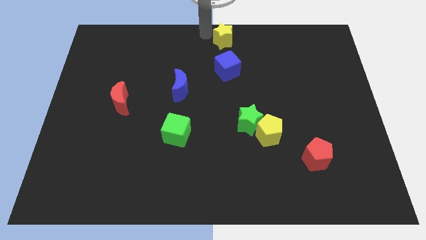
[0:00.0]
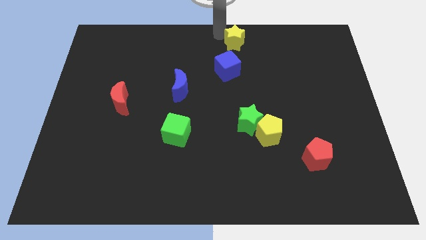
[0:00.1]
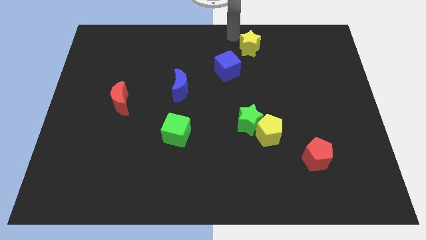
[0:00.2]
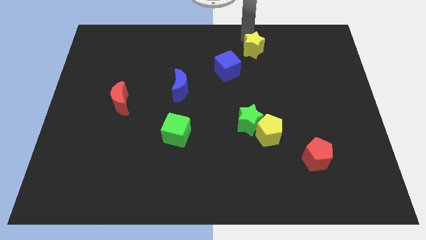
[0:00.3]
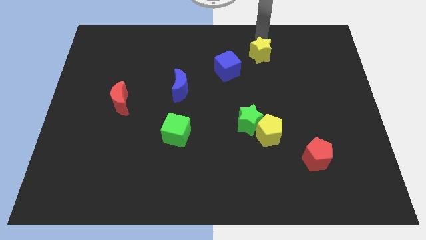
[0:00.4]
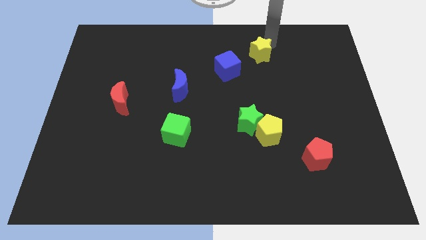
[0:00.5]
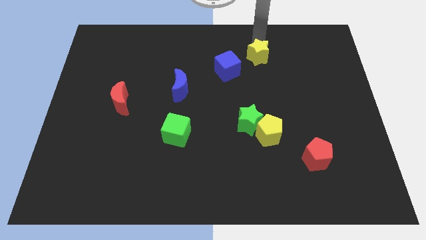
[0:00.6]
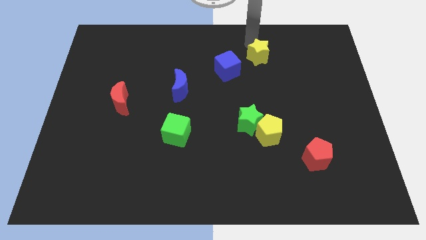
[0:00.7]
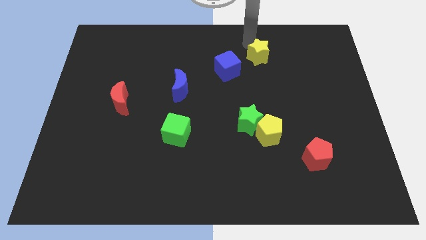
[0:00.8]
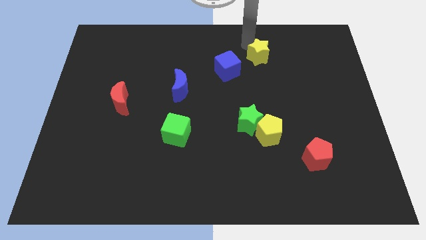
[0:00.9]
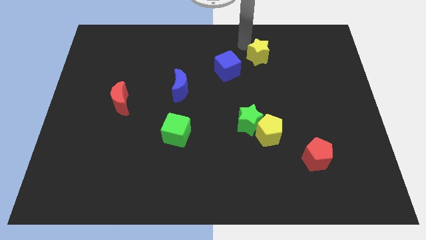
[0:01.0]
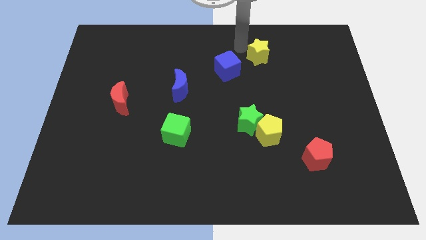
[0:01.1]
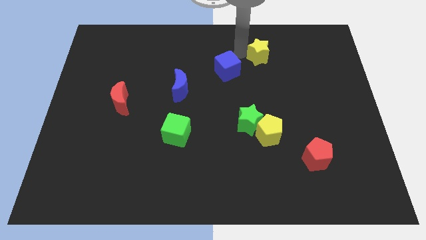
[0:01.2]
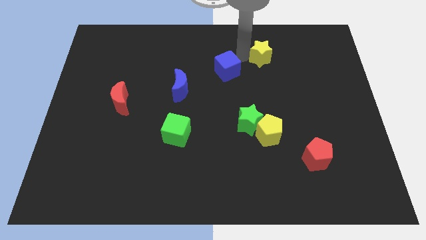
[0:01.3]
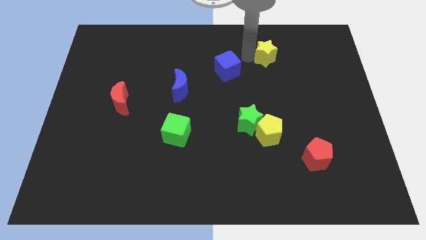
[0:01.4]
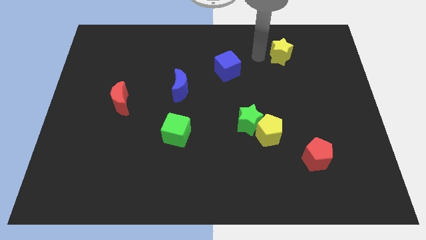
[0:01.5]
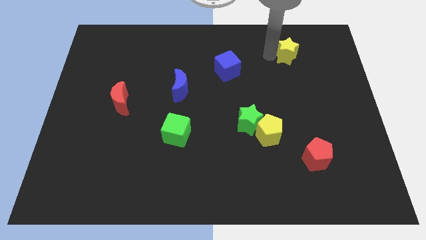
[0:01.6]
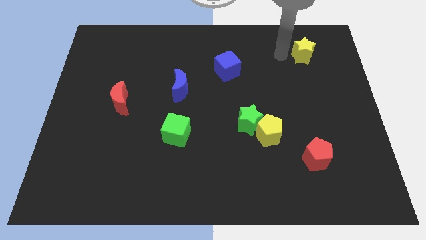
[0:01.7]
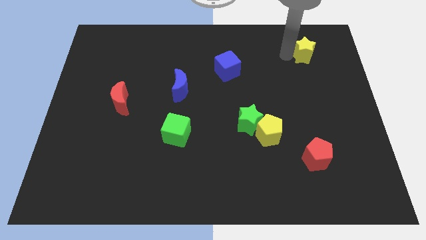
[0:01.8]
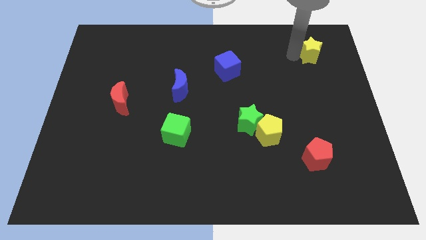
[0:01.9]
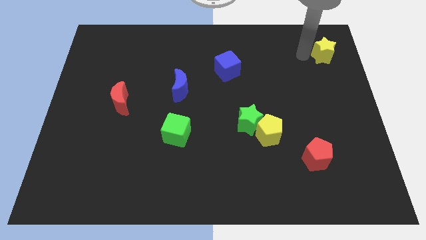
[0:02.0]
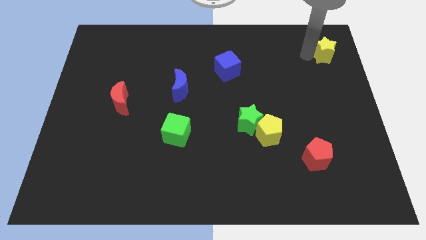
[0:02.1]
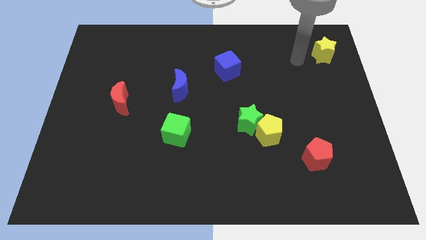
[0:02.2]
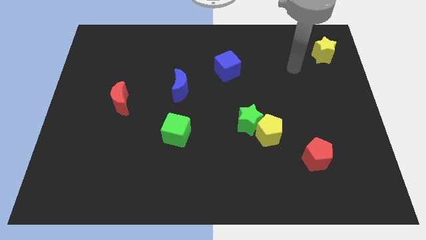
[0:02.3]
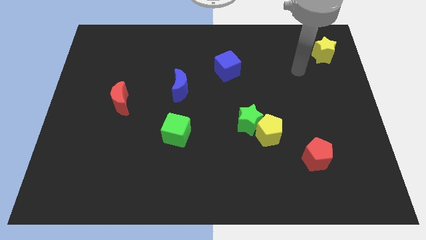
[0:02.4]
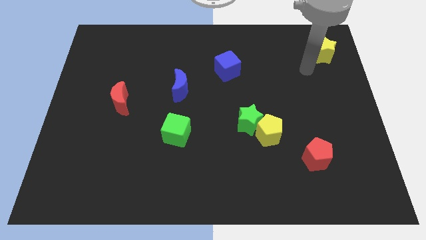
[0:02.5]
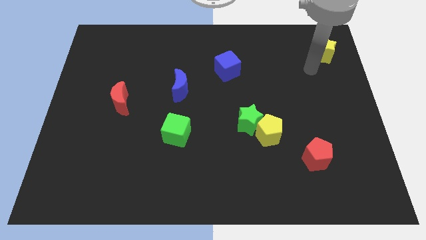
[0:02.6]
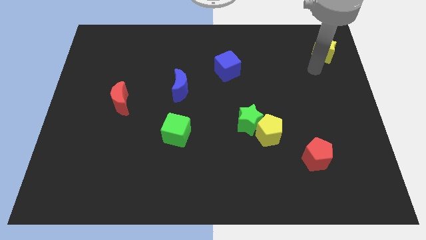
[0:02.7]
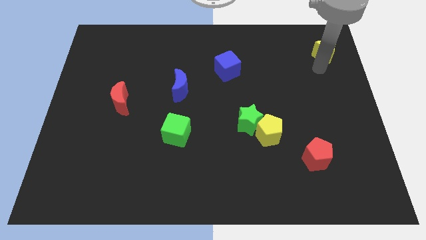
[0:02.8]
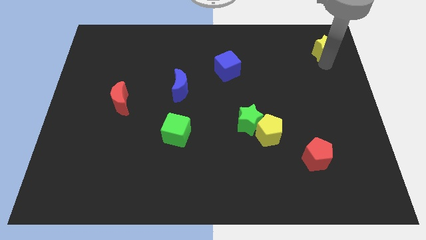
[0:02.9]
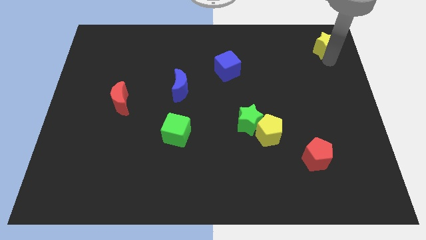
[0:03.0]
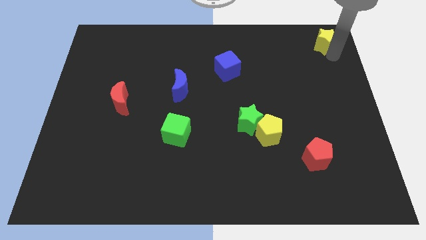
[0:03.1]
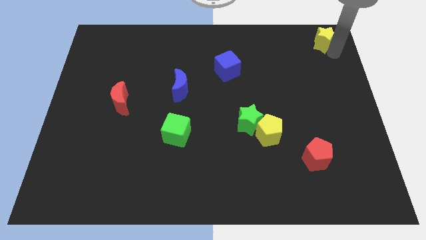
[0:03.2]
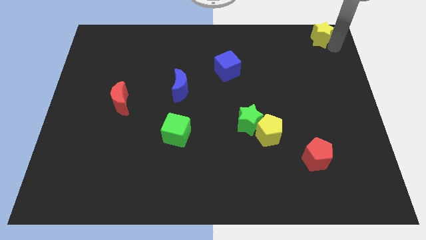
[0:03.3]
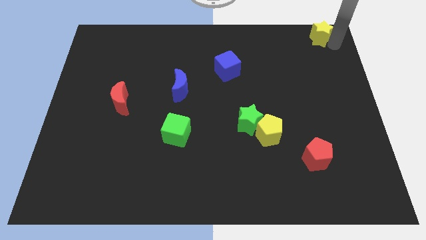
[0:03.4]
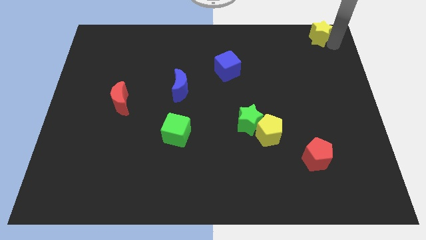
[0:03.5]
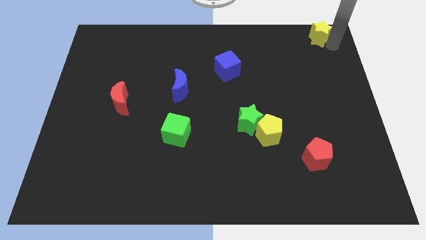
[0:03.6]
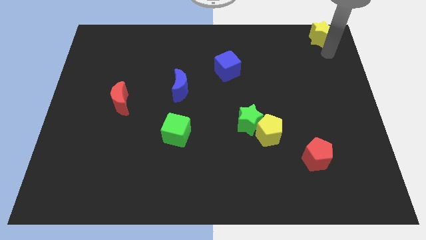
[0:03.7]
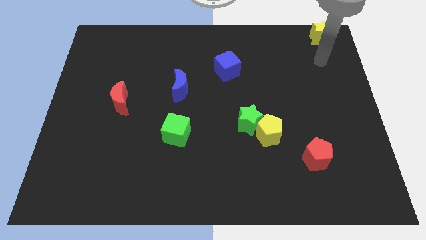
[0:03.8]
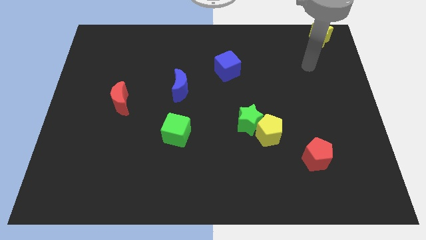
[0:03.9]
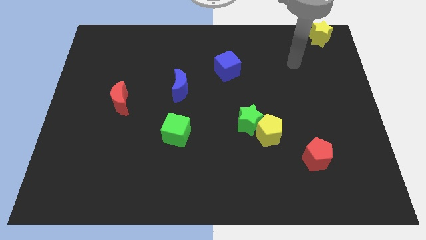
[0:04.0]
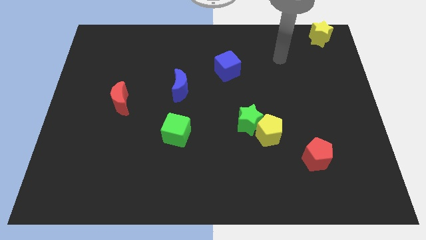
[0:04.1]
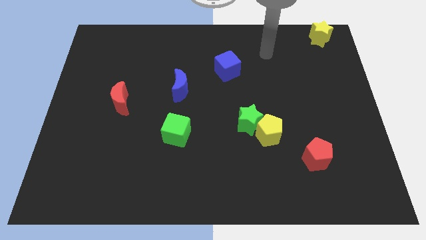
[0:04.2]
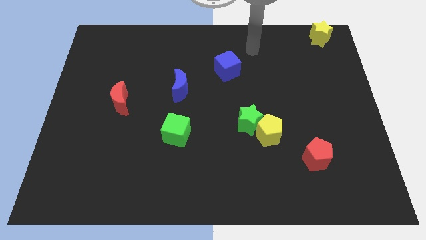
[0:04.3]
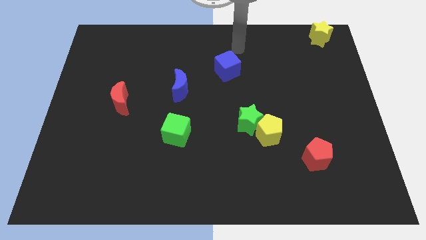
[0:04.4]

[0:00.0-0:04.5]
move the yellow star to the top right side of the board

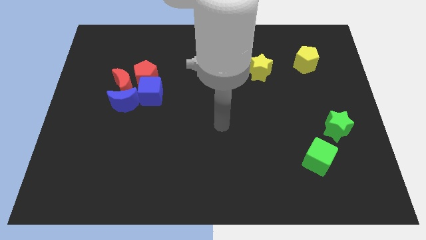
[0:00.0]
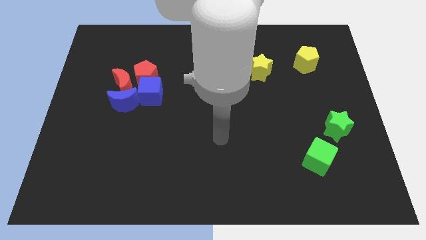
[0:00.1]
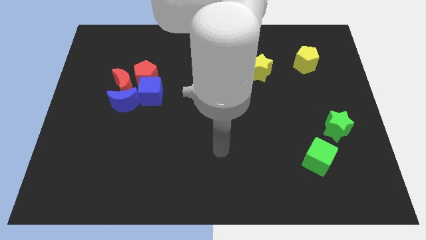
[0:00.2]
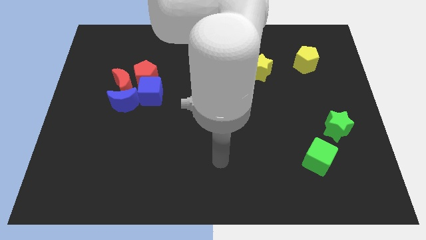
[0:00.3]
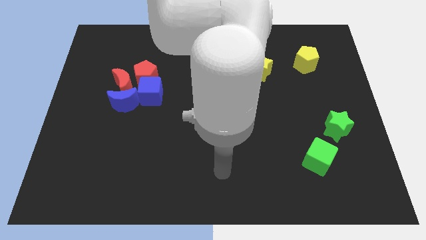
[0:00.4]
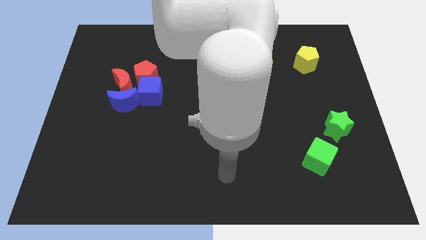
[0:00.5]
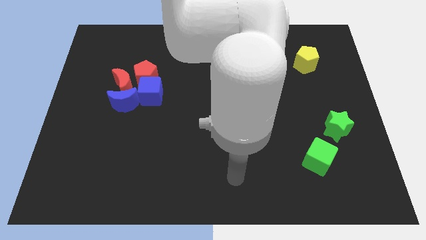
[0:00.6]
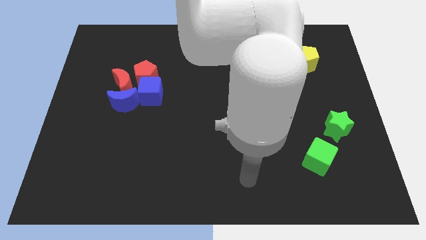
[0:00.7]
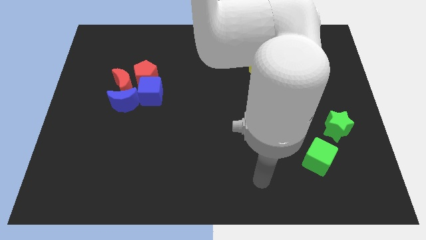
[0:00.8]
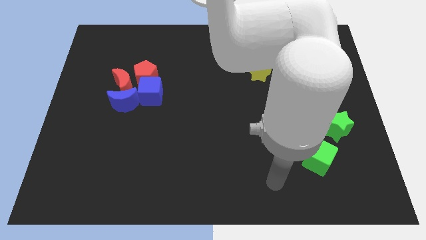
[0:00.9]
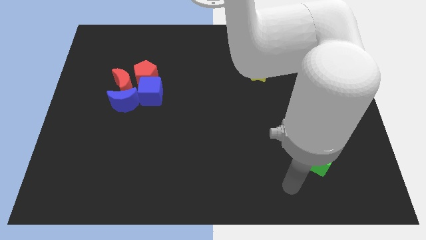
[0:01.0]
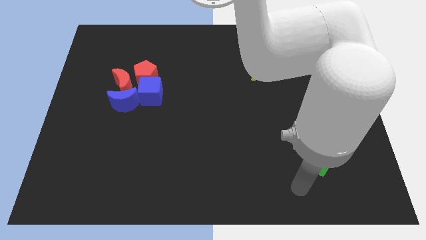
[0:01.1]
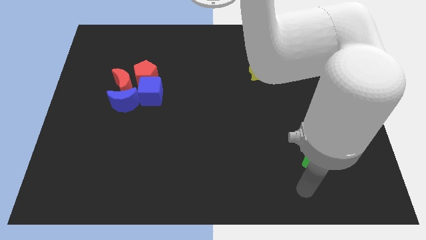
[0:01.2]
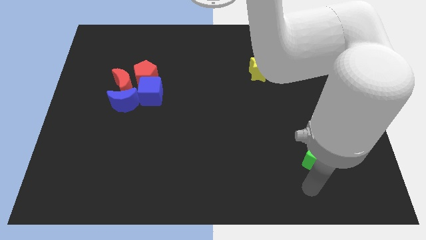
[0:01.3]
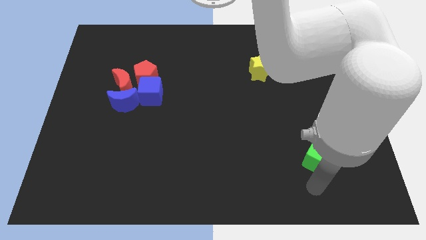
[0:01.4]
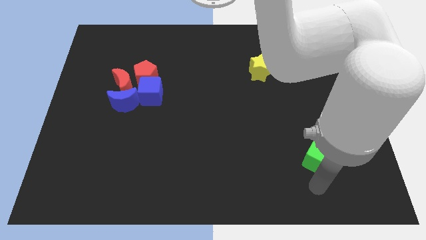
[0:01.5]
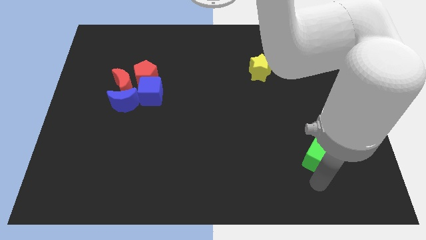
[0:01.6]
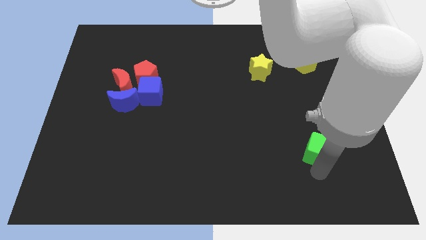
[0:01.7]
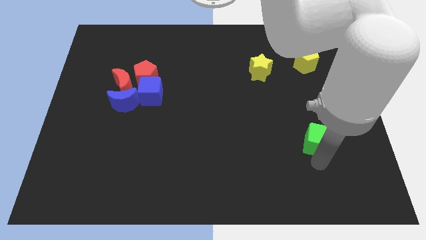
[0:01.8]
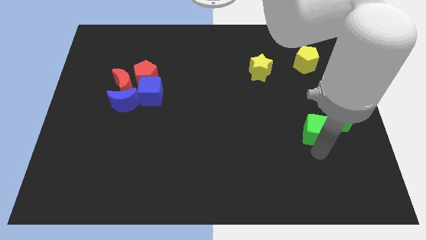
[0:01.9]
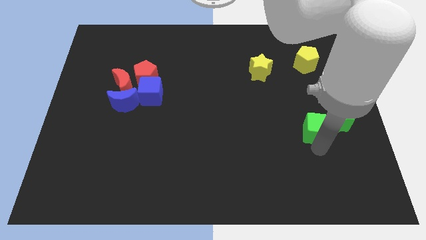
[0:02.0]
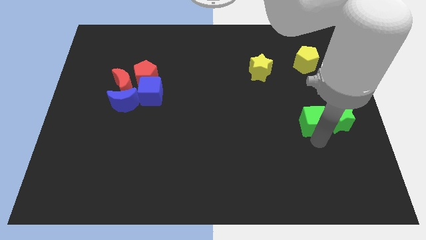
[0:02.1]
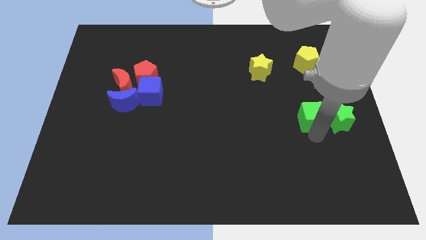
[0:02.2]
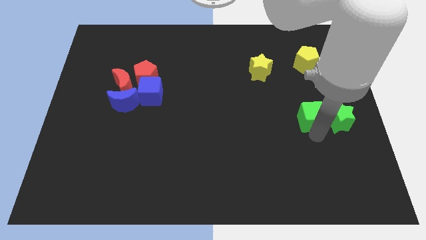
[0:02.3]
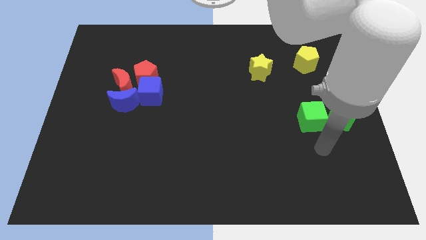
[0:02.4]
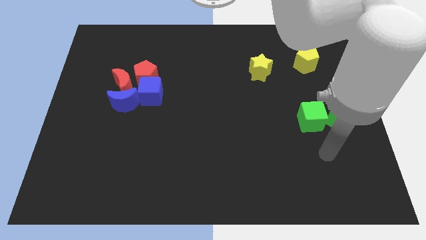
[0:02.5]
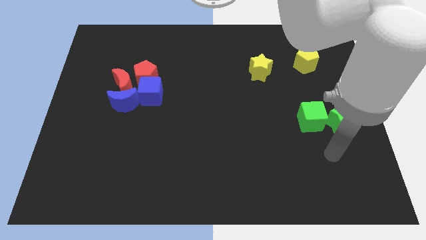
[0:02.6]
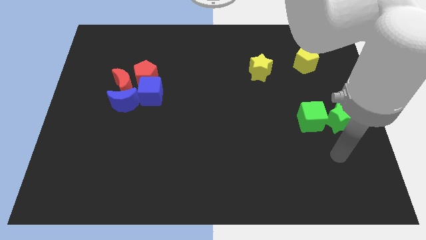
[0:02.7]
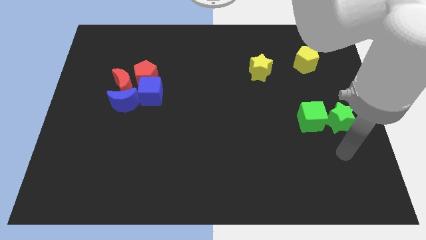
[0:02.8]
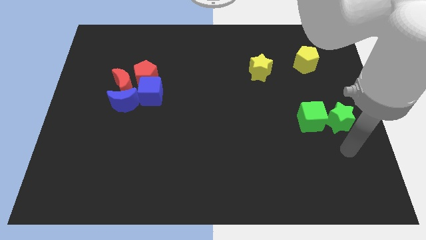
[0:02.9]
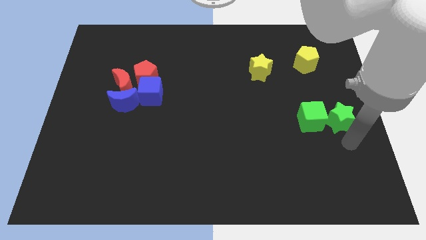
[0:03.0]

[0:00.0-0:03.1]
move green cube to the left of green star

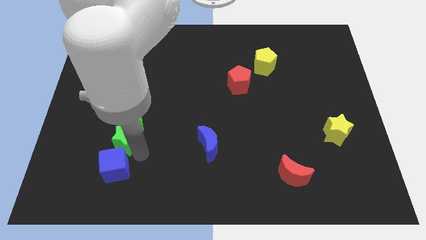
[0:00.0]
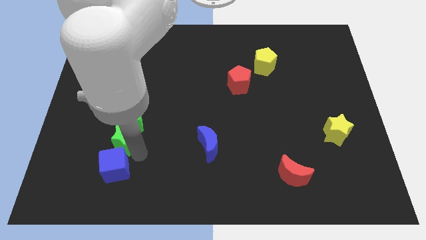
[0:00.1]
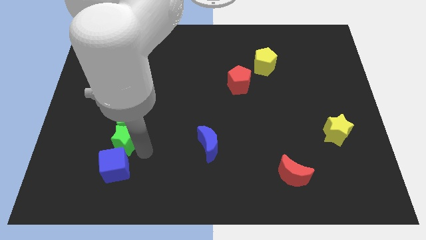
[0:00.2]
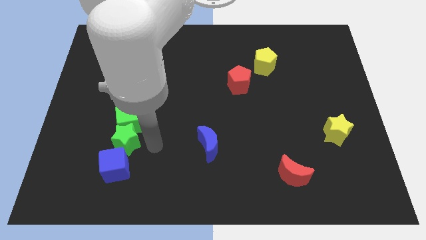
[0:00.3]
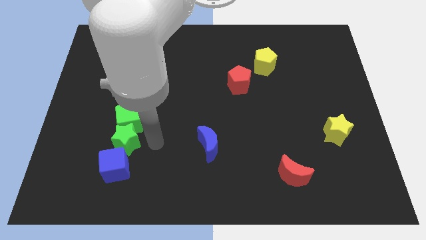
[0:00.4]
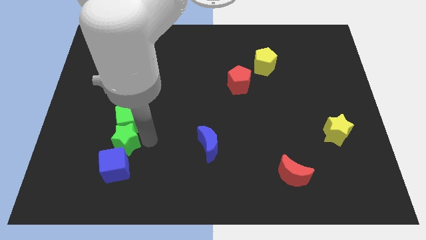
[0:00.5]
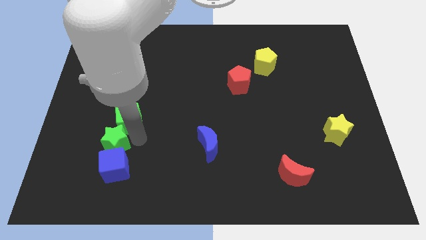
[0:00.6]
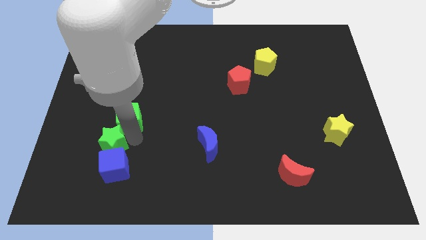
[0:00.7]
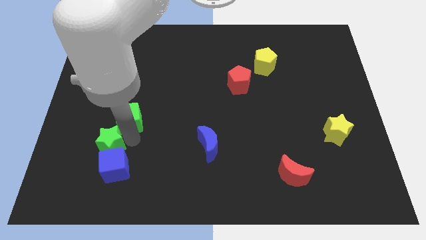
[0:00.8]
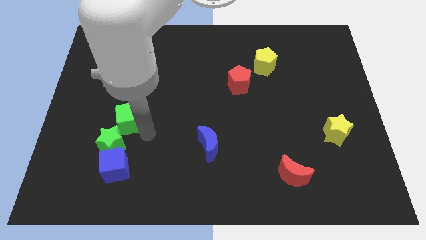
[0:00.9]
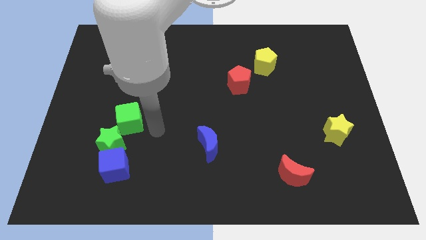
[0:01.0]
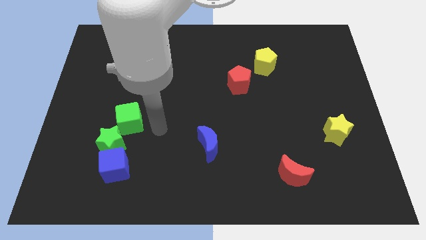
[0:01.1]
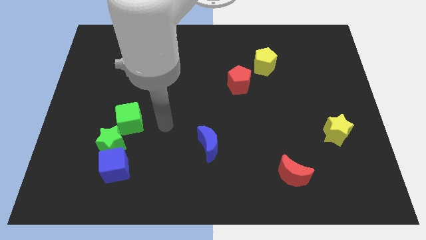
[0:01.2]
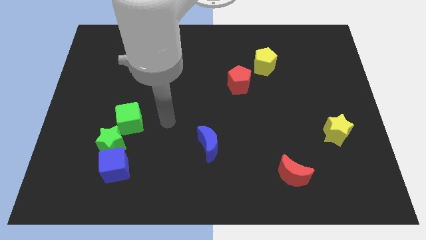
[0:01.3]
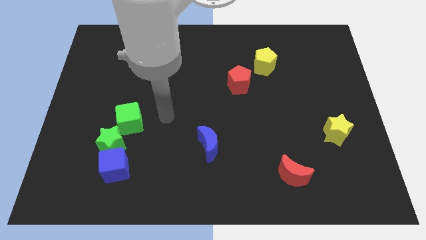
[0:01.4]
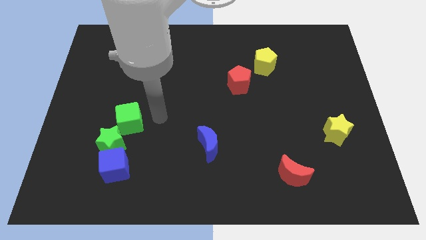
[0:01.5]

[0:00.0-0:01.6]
move the green star to the bottom left of the green cube
